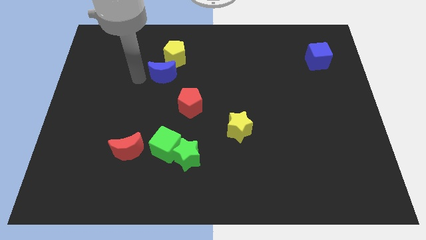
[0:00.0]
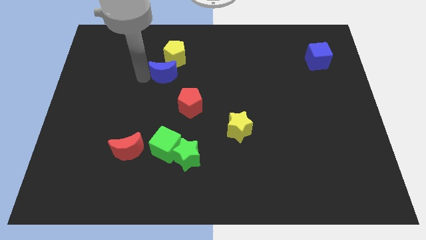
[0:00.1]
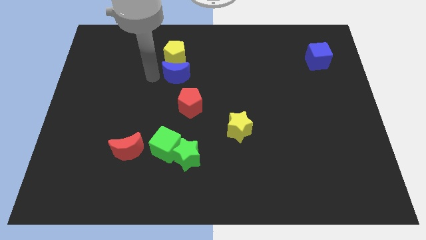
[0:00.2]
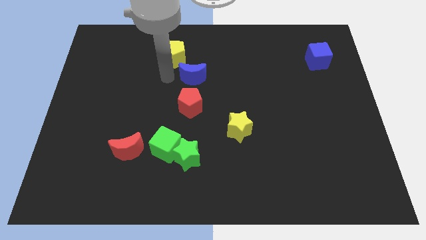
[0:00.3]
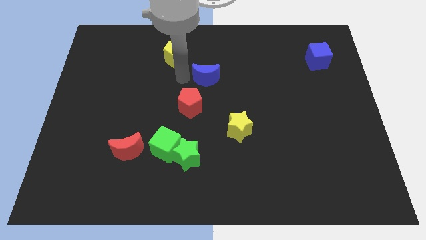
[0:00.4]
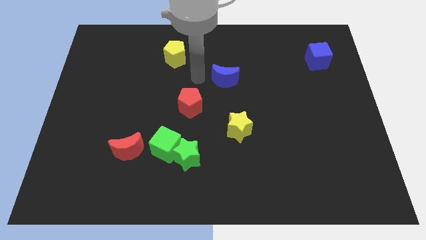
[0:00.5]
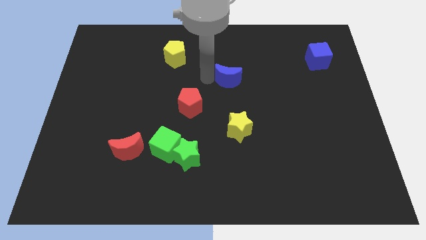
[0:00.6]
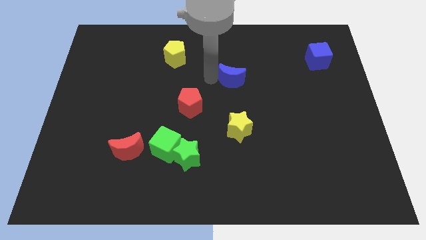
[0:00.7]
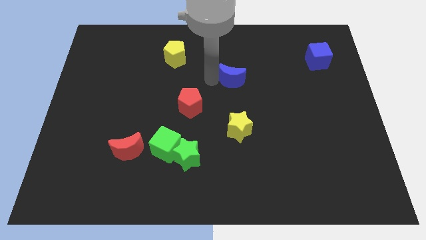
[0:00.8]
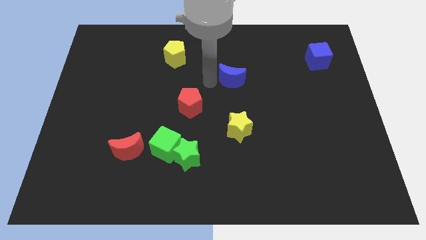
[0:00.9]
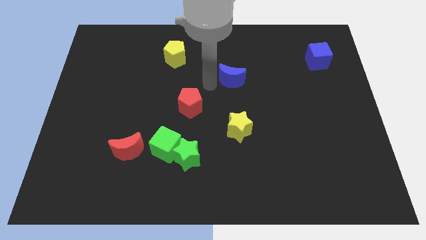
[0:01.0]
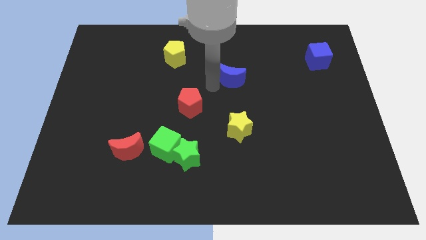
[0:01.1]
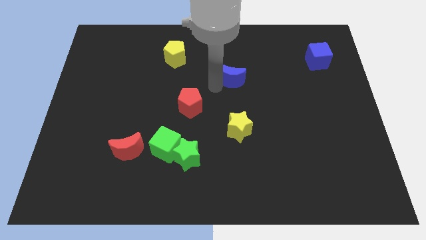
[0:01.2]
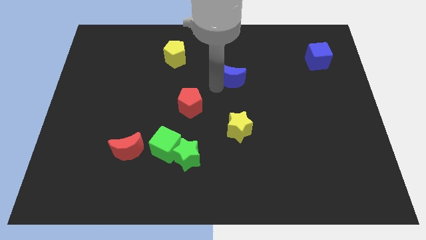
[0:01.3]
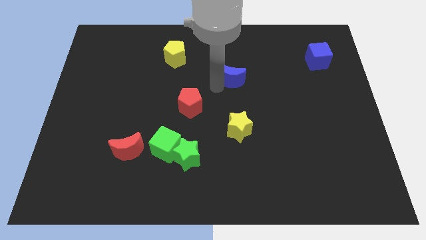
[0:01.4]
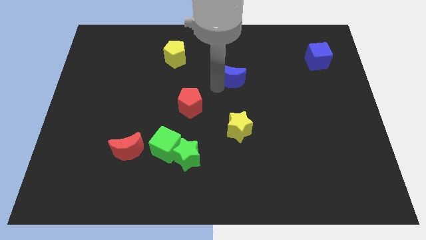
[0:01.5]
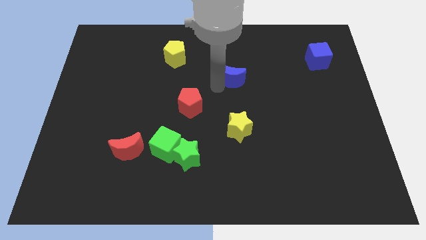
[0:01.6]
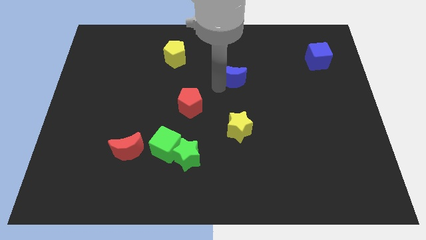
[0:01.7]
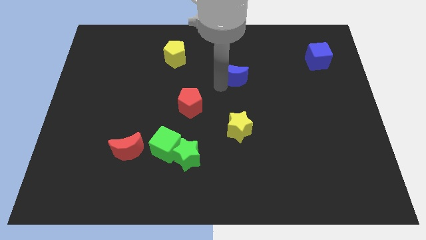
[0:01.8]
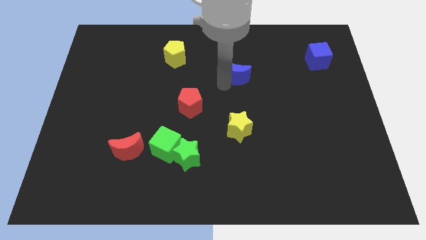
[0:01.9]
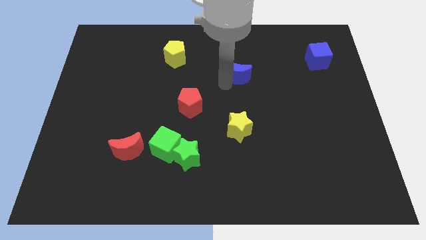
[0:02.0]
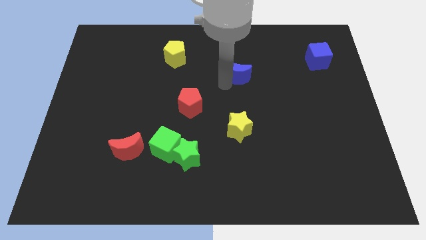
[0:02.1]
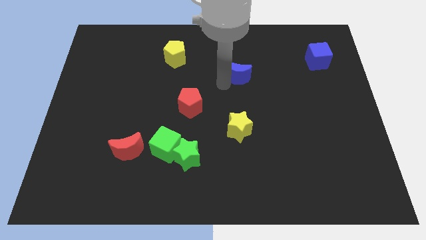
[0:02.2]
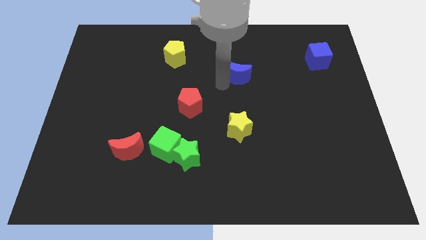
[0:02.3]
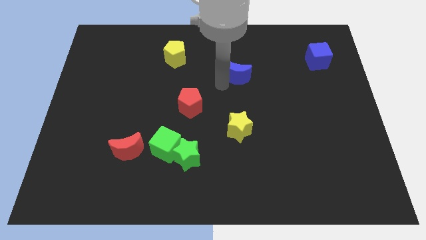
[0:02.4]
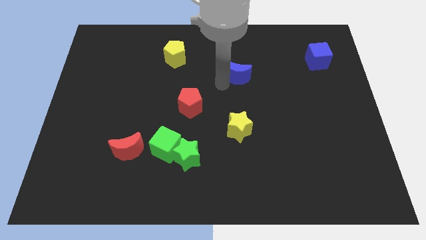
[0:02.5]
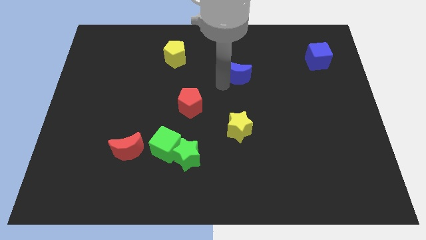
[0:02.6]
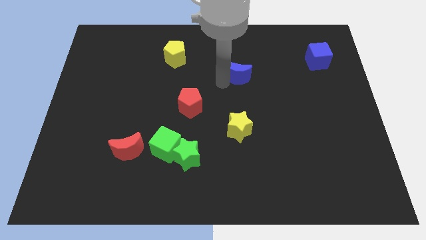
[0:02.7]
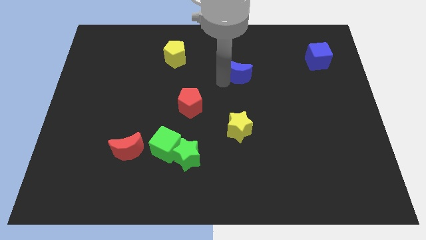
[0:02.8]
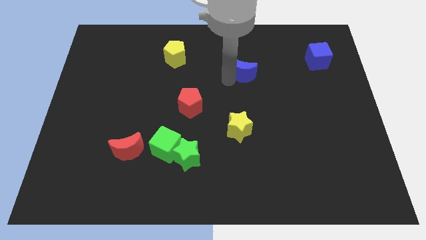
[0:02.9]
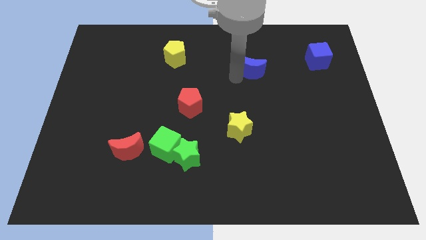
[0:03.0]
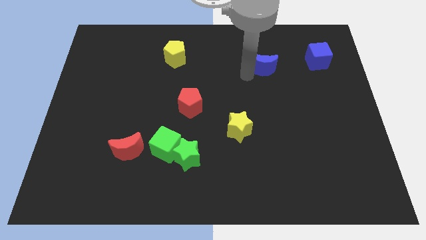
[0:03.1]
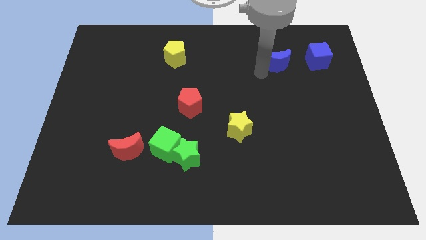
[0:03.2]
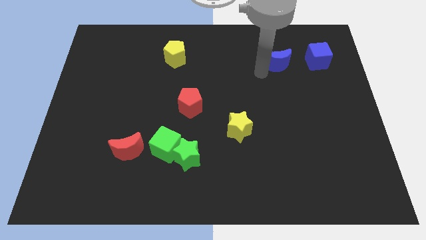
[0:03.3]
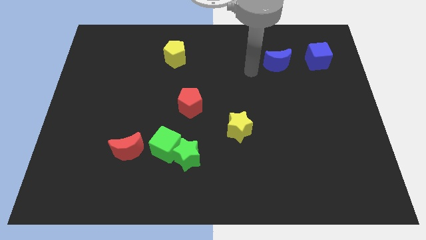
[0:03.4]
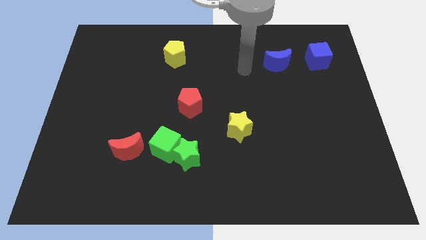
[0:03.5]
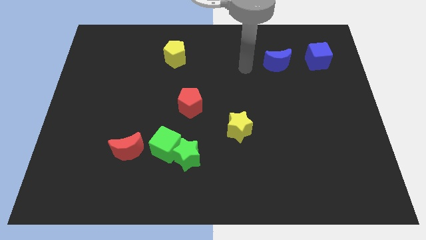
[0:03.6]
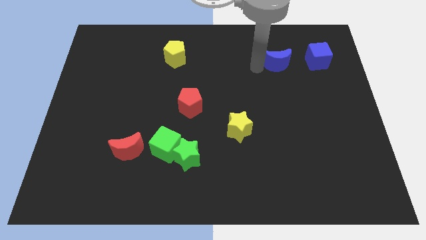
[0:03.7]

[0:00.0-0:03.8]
place the blue crescent to the left of the blue cube

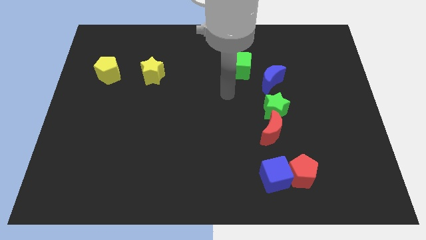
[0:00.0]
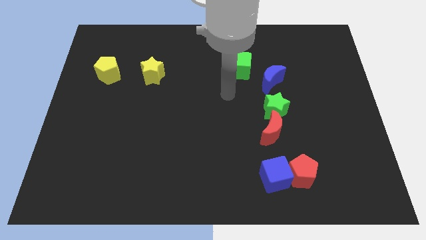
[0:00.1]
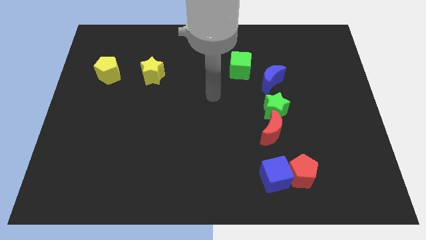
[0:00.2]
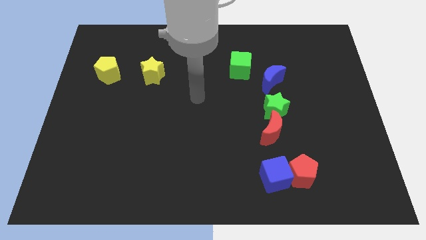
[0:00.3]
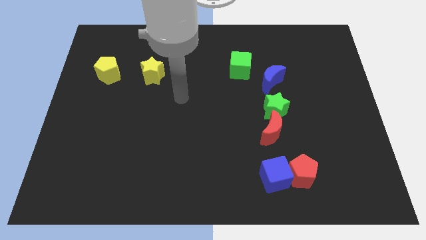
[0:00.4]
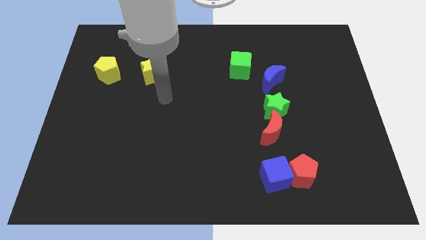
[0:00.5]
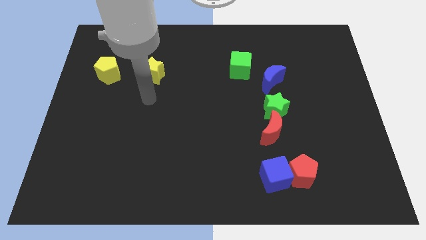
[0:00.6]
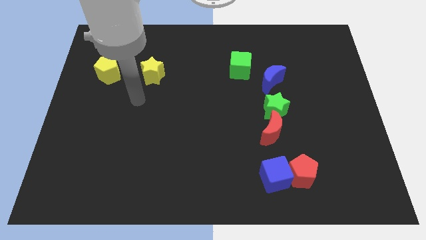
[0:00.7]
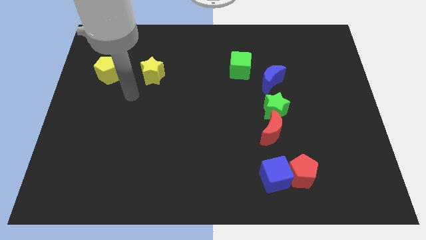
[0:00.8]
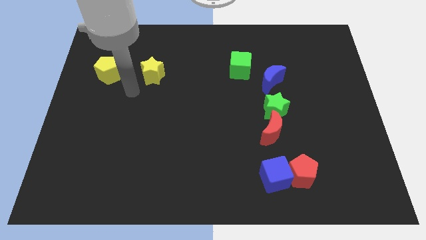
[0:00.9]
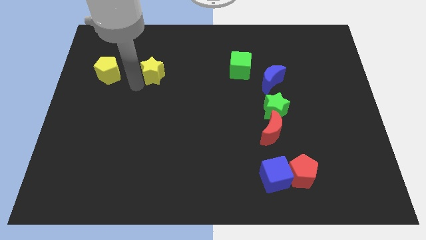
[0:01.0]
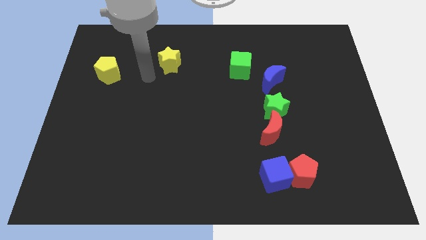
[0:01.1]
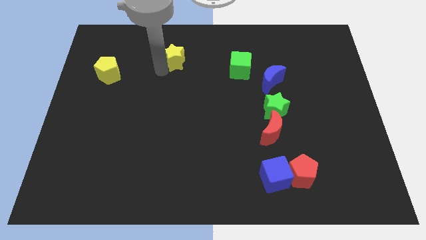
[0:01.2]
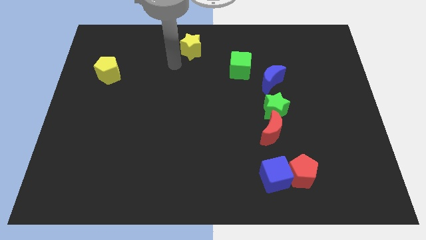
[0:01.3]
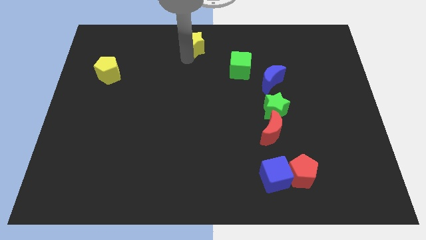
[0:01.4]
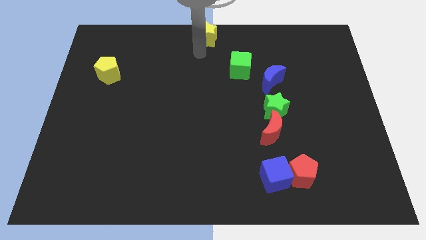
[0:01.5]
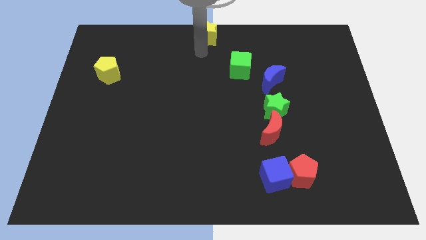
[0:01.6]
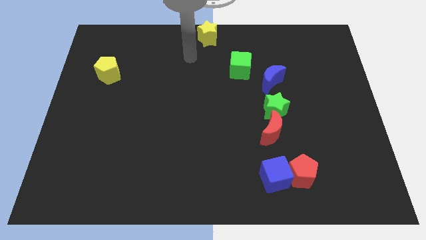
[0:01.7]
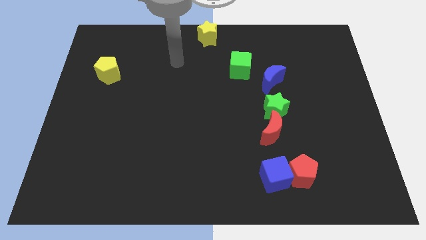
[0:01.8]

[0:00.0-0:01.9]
place the yellow star in diagonal position with the green cube

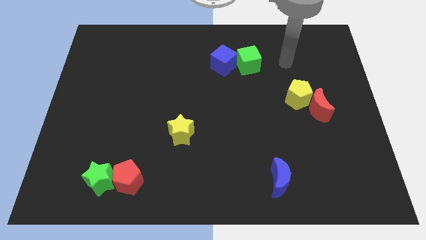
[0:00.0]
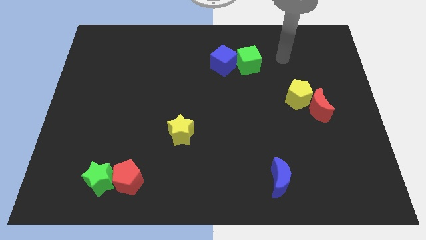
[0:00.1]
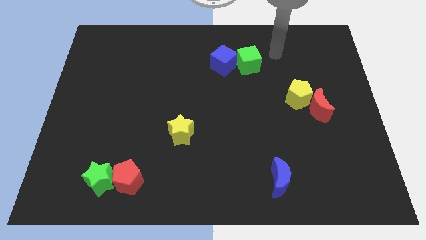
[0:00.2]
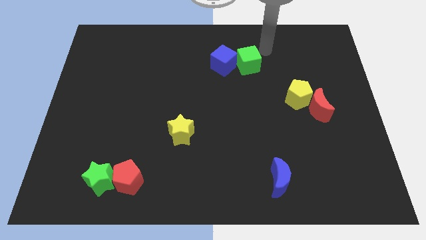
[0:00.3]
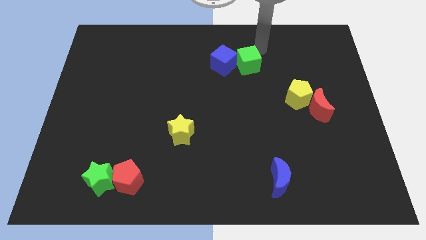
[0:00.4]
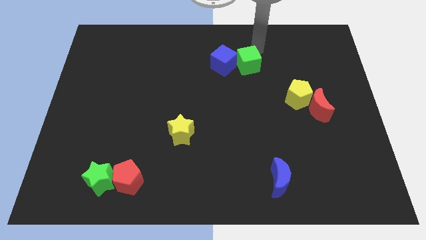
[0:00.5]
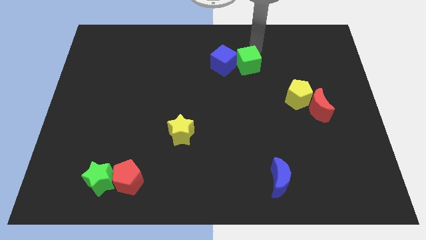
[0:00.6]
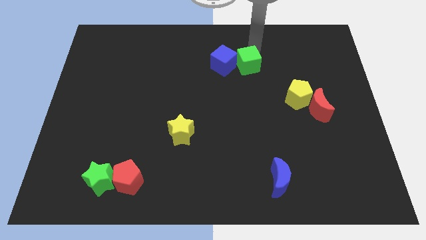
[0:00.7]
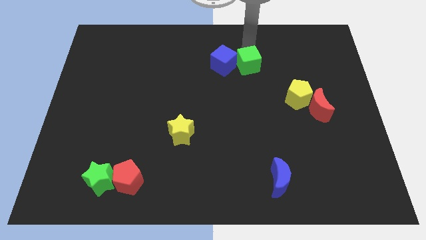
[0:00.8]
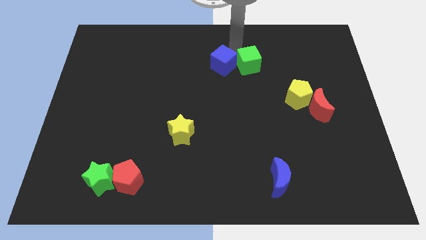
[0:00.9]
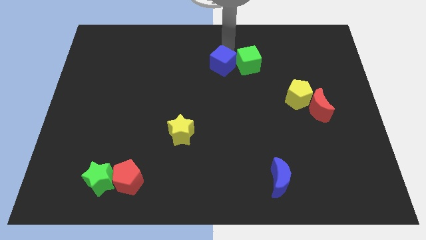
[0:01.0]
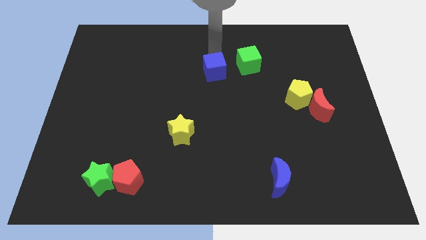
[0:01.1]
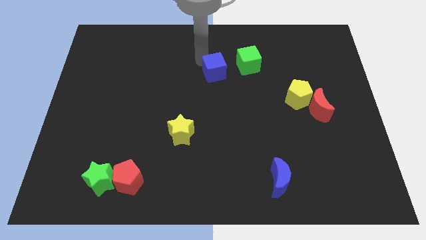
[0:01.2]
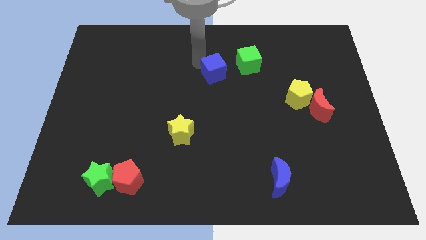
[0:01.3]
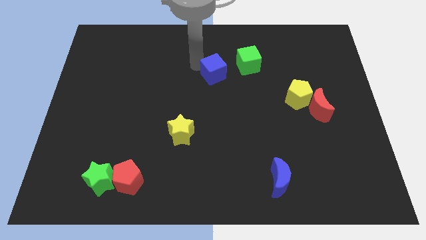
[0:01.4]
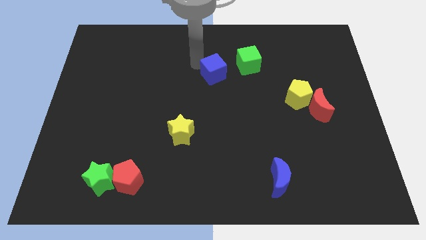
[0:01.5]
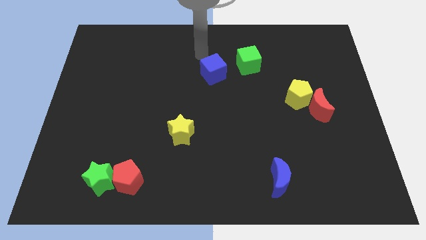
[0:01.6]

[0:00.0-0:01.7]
separate the blue cube from green cube

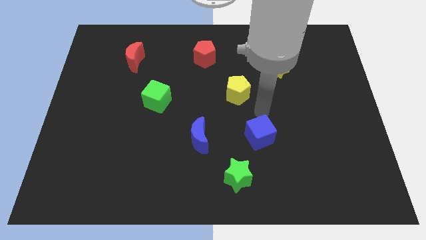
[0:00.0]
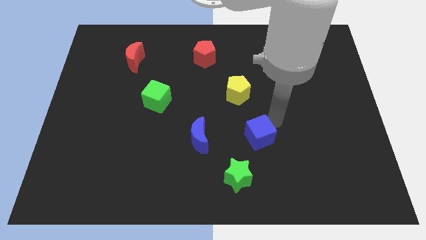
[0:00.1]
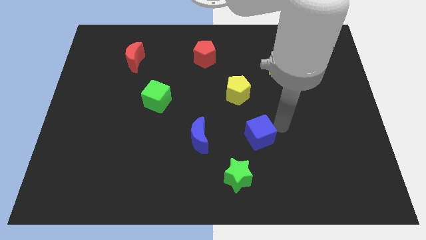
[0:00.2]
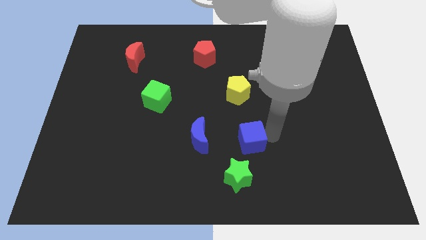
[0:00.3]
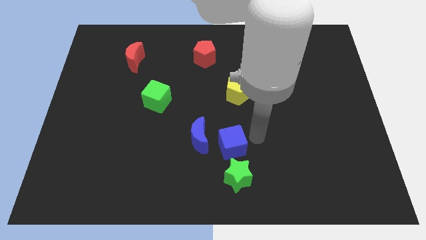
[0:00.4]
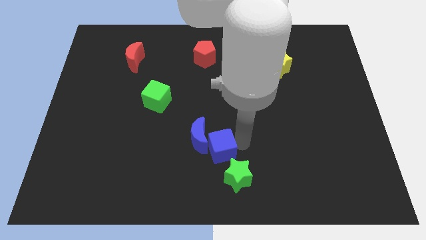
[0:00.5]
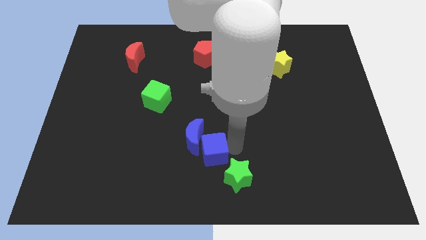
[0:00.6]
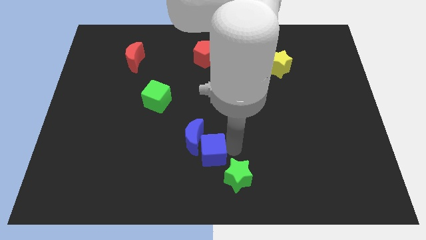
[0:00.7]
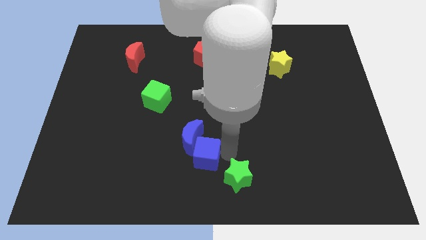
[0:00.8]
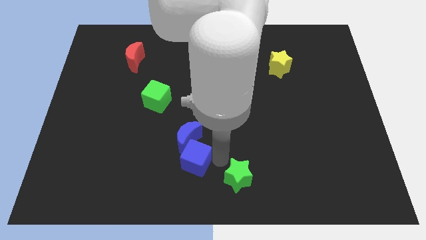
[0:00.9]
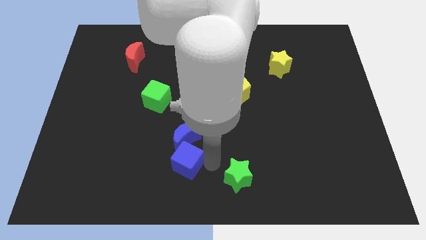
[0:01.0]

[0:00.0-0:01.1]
push the blue cube to the bottom of the blue crescent

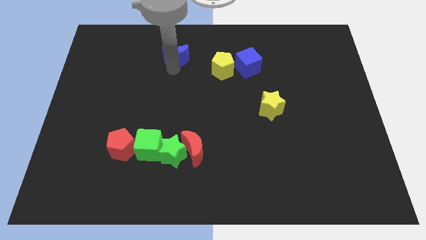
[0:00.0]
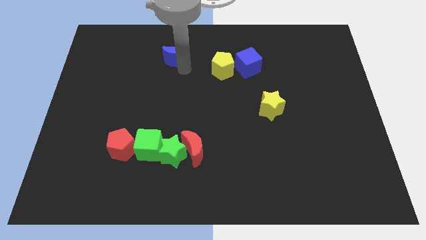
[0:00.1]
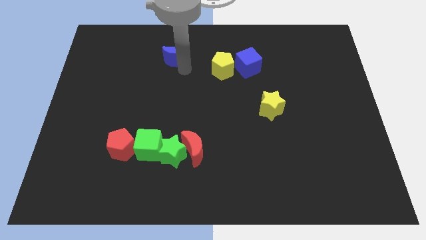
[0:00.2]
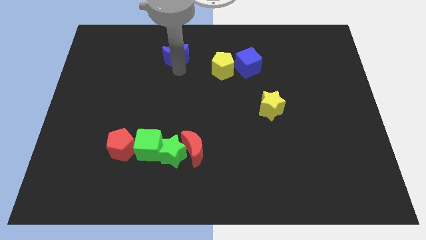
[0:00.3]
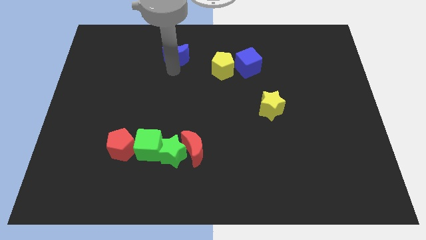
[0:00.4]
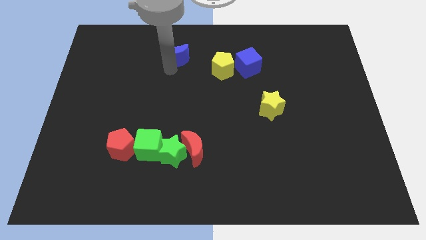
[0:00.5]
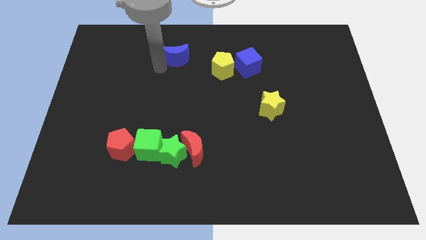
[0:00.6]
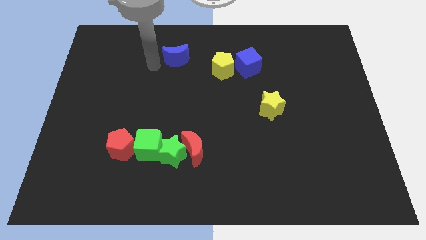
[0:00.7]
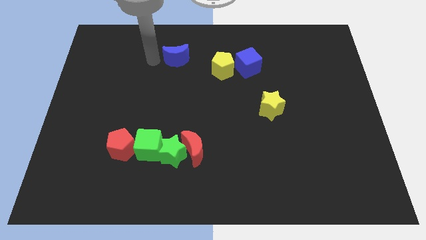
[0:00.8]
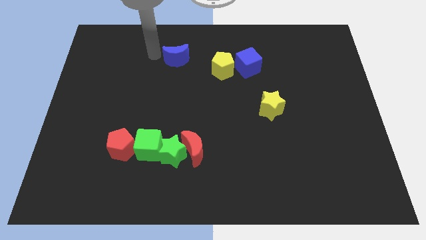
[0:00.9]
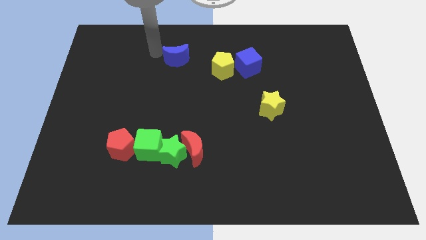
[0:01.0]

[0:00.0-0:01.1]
point your arm to the left of the blue crescent
